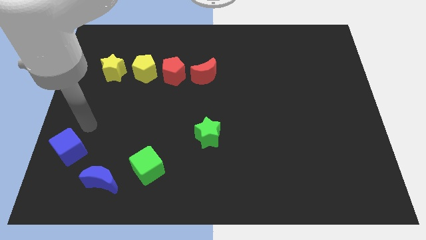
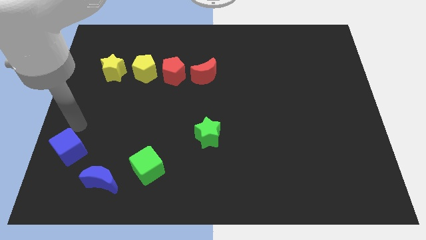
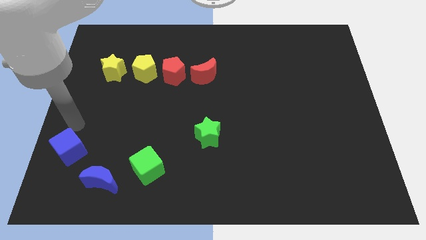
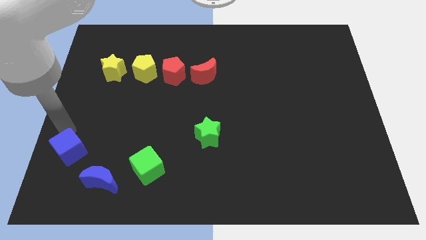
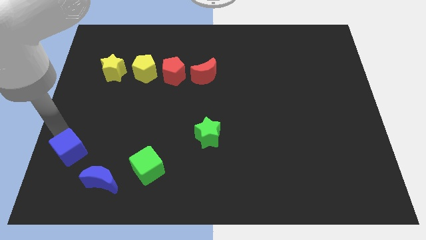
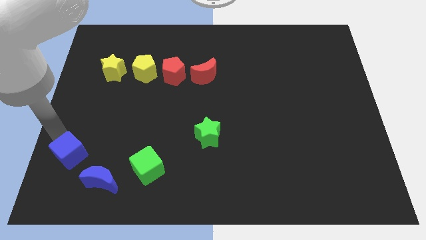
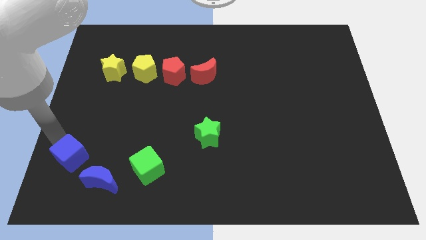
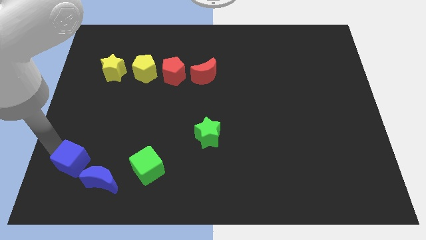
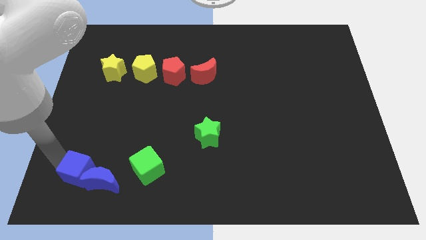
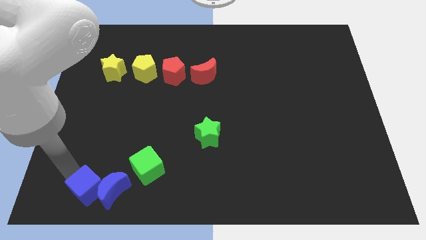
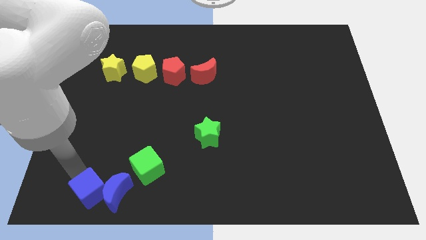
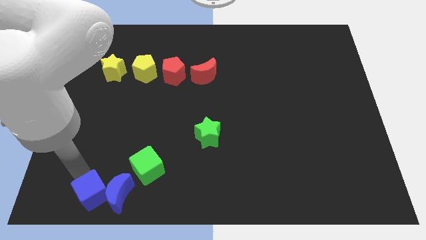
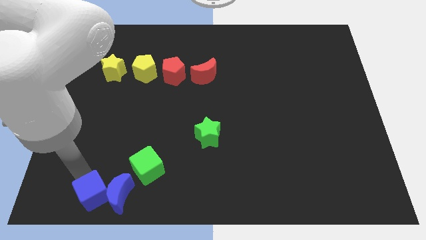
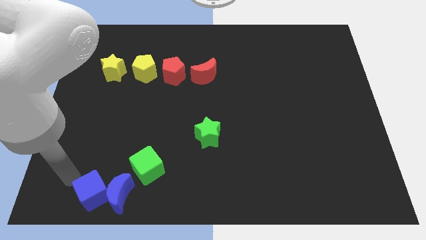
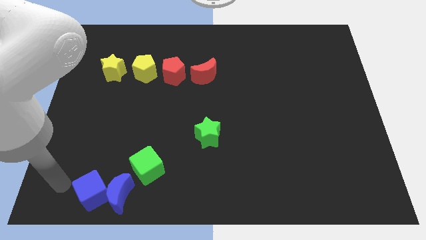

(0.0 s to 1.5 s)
push the blue cube close to the blue moon

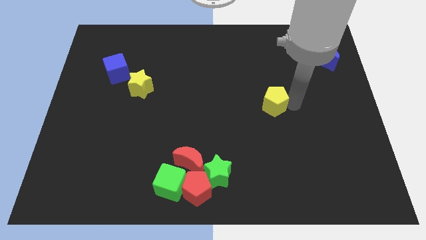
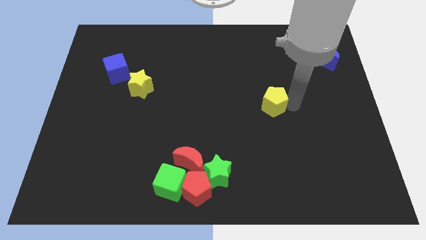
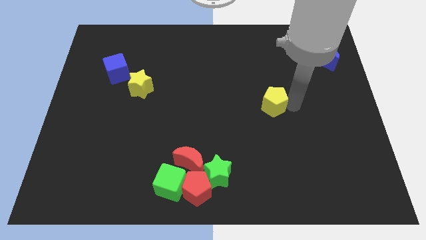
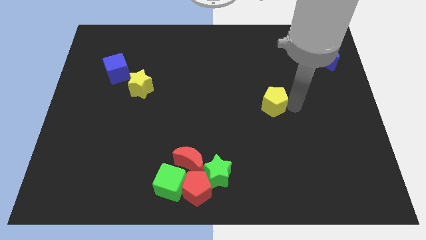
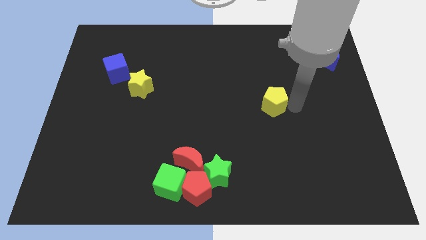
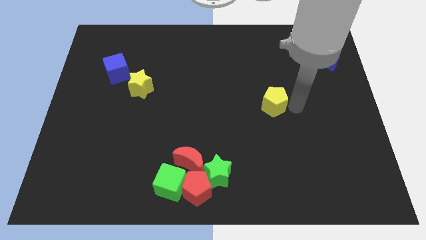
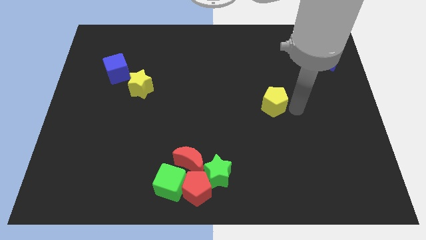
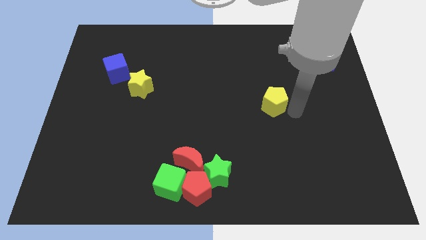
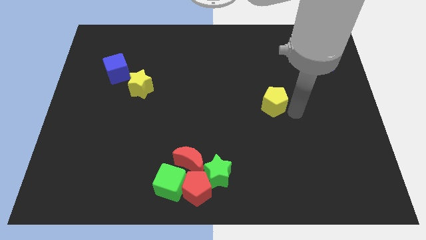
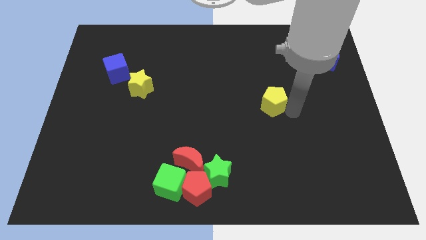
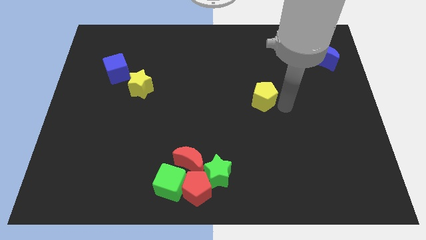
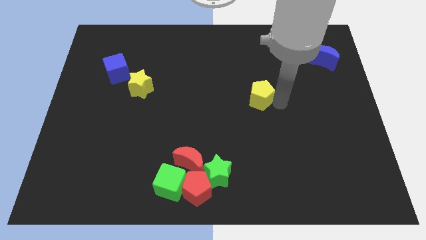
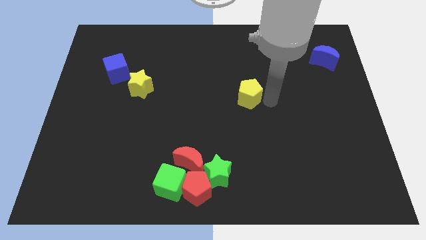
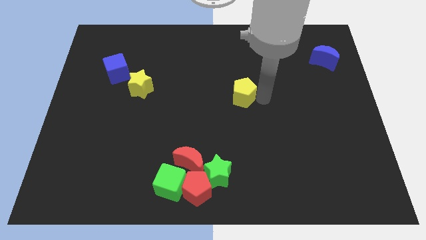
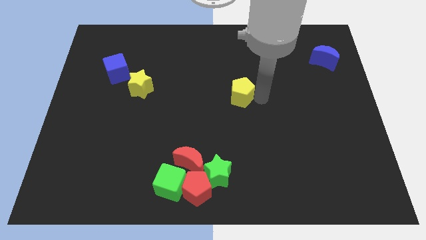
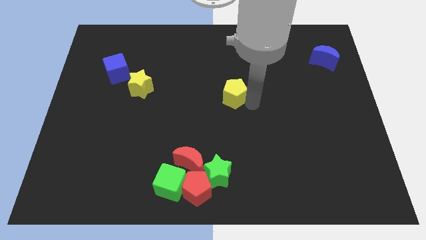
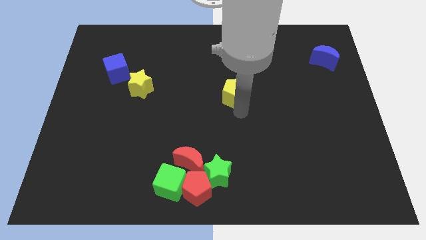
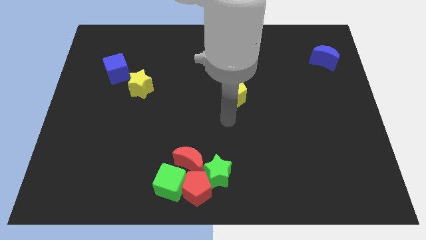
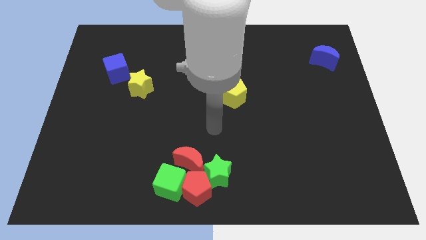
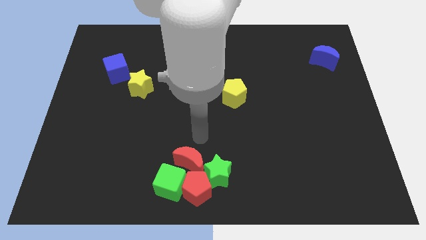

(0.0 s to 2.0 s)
place the yellow pentagon above the green star

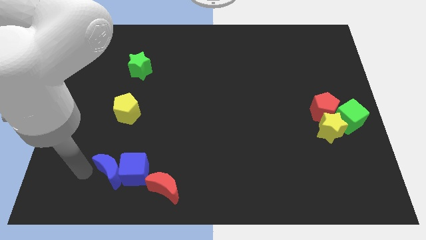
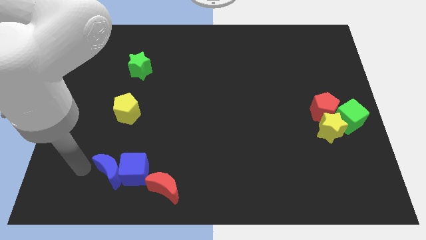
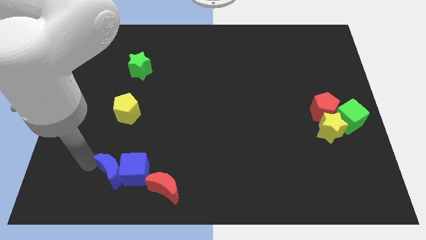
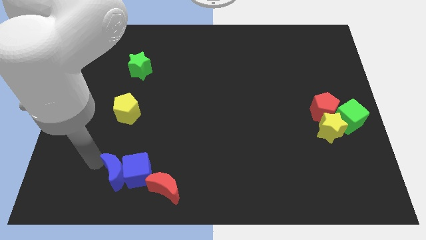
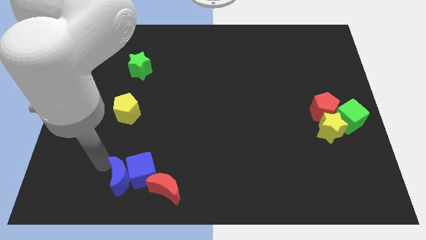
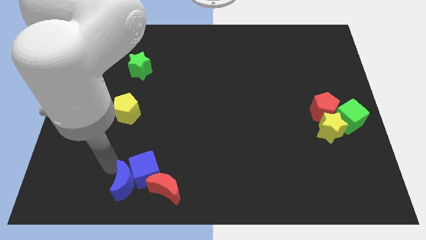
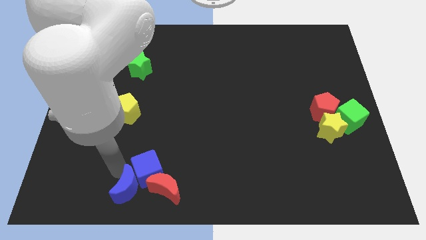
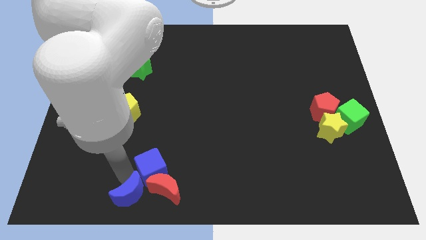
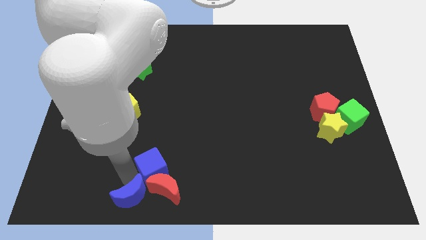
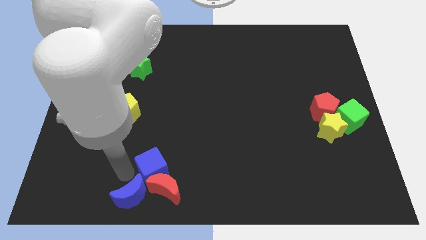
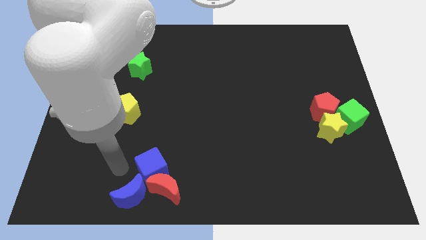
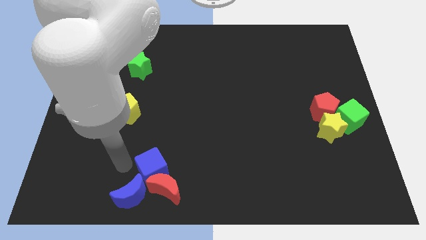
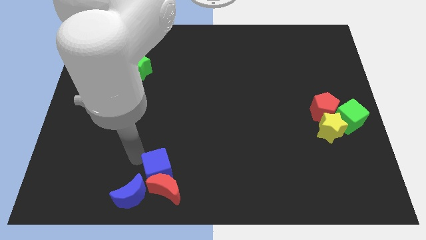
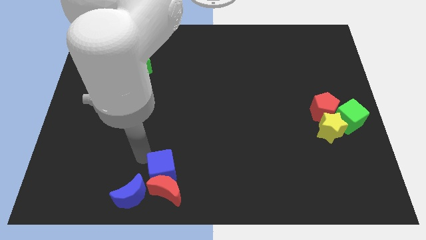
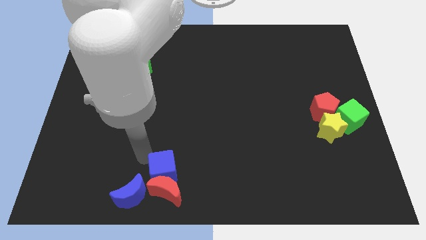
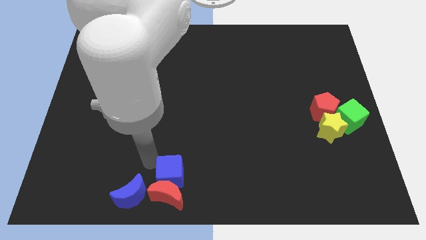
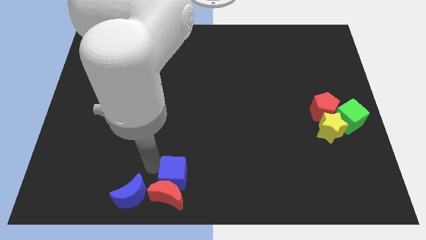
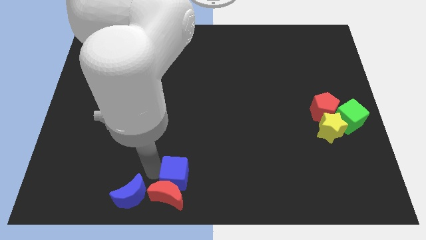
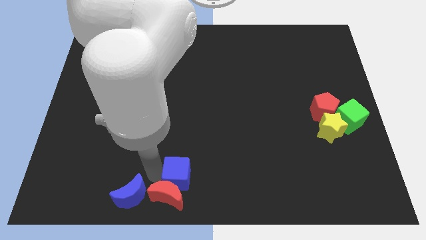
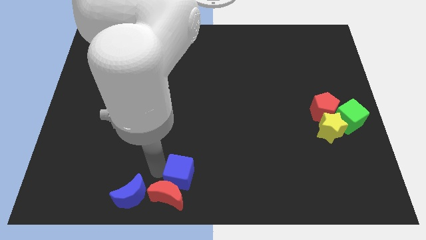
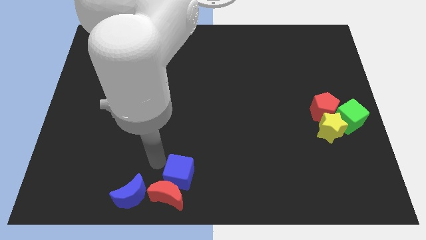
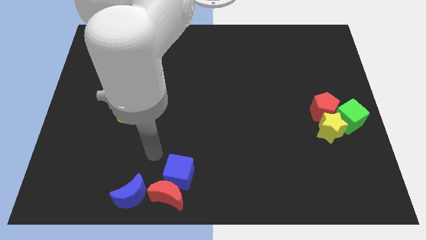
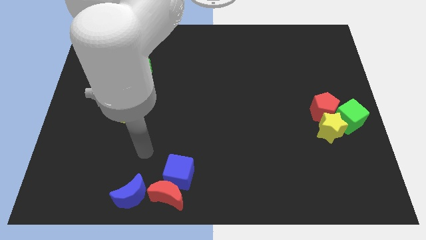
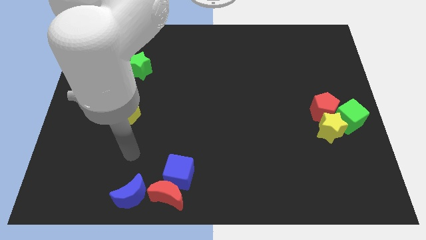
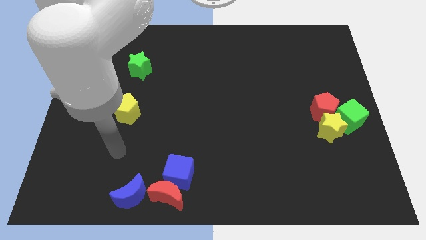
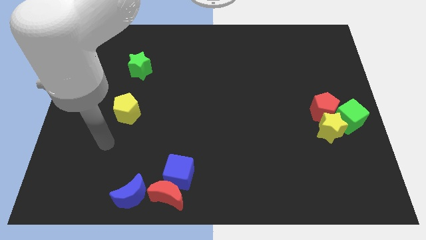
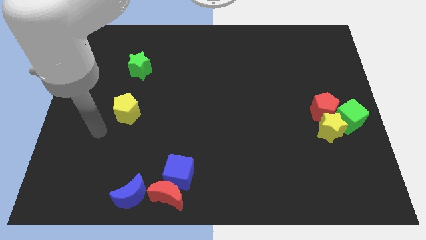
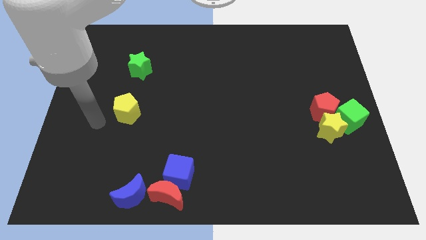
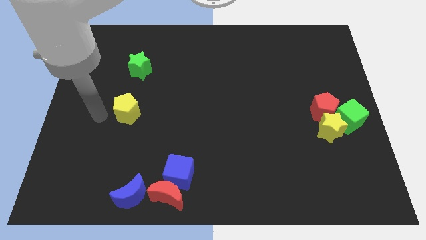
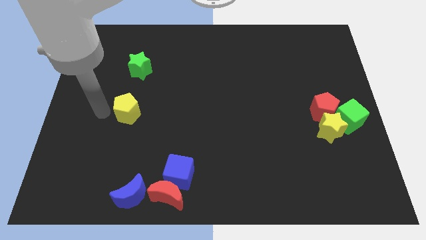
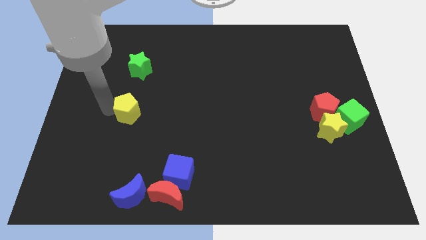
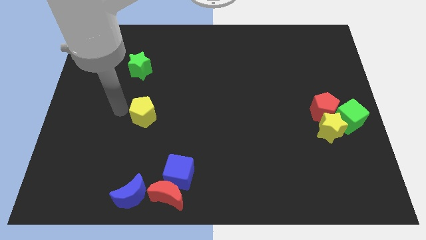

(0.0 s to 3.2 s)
push the blue cube away from the blue crescent

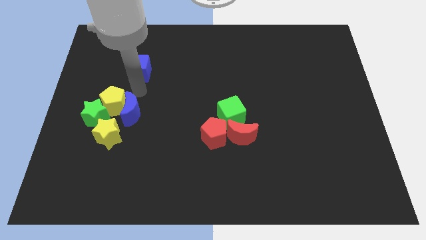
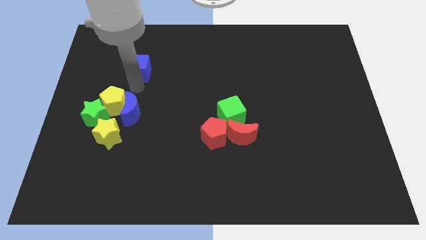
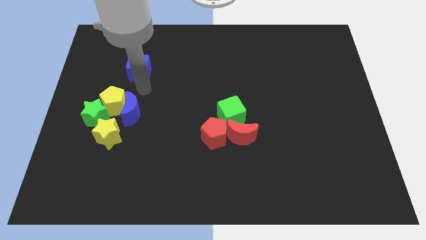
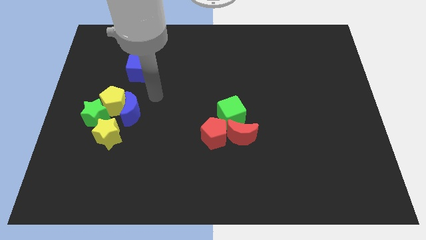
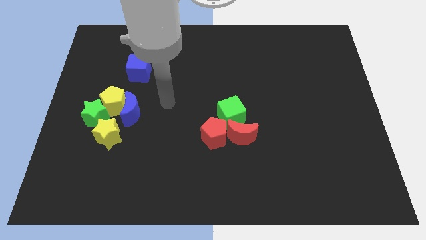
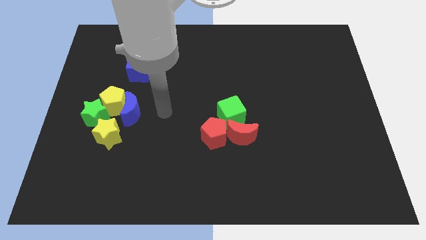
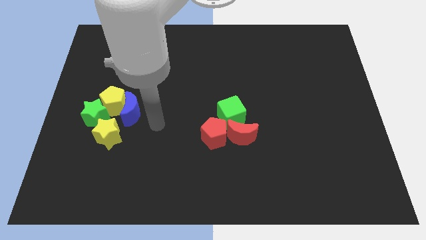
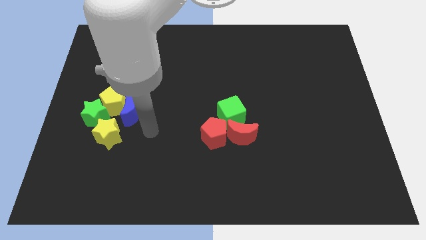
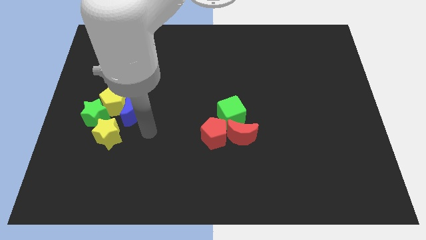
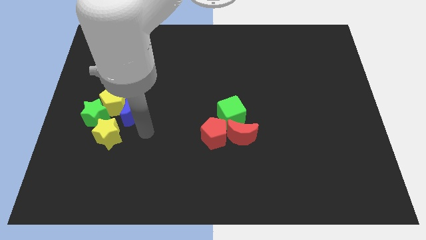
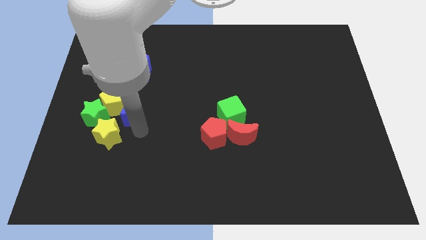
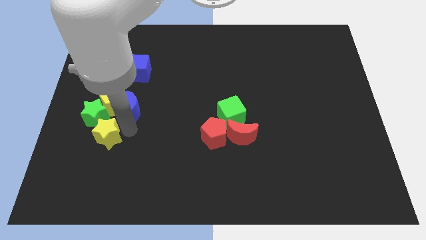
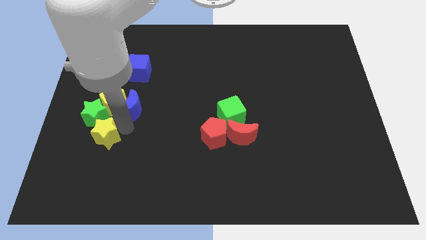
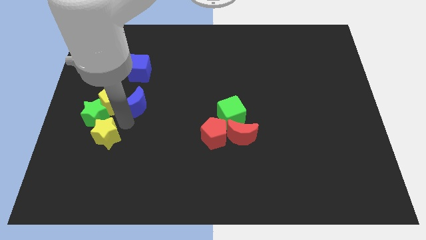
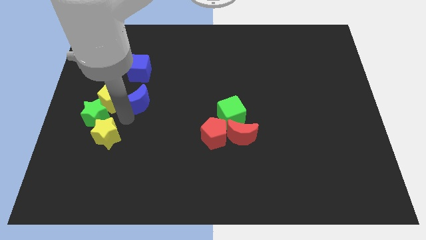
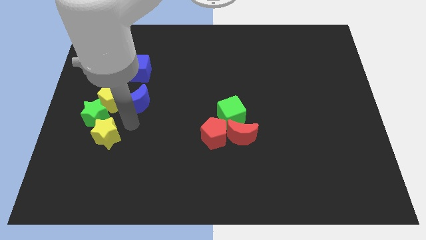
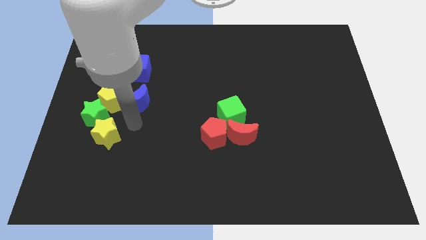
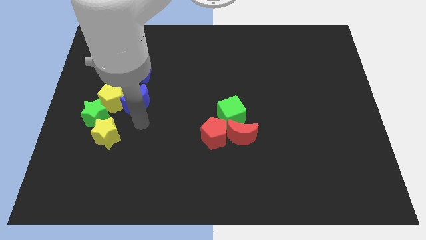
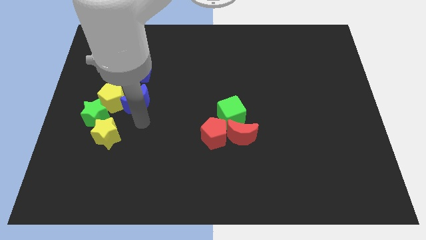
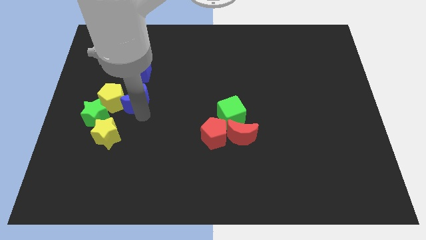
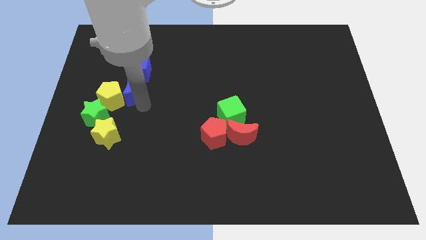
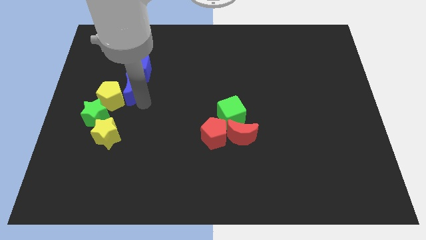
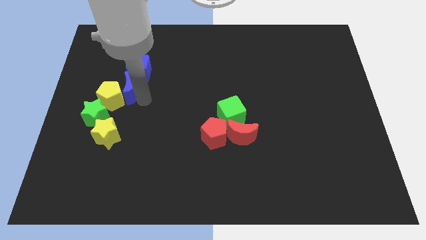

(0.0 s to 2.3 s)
move the blue moon to the top of the blue cube
